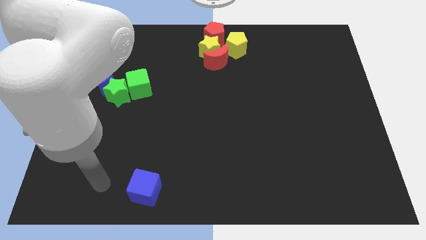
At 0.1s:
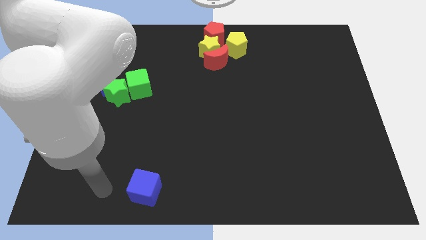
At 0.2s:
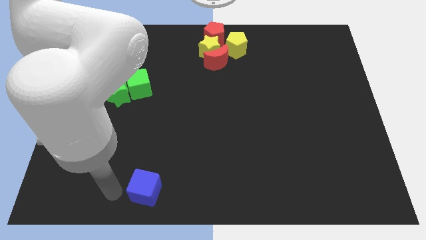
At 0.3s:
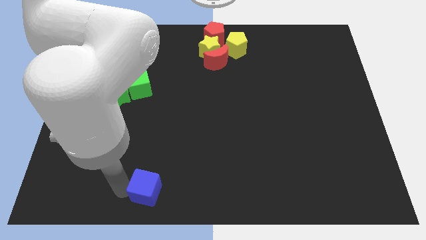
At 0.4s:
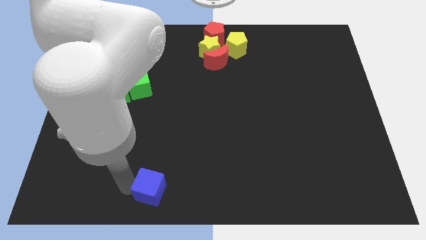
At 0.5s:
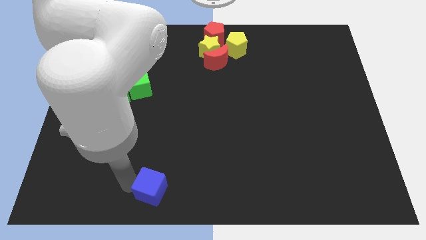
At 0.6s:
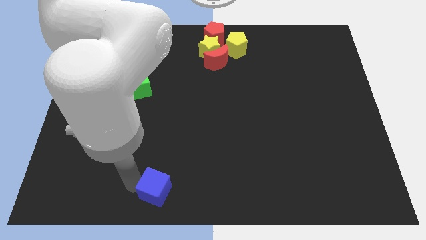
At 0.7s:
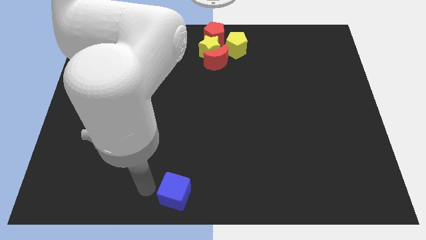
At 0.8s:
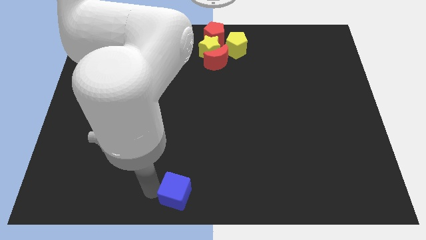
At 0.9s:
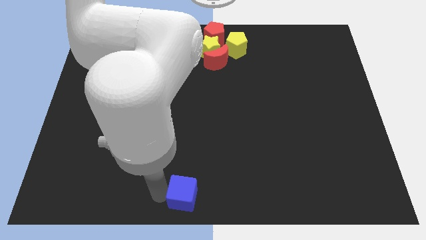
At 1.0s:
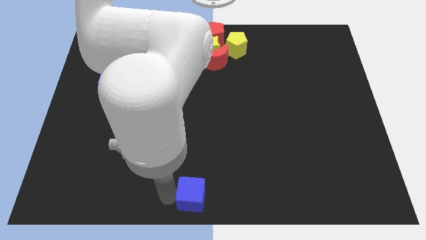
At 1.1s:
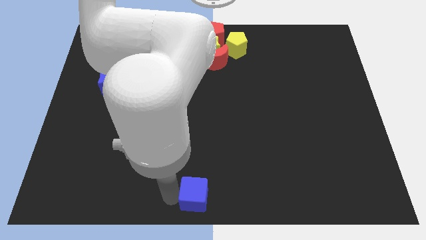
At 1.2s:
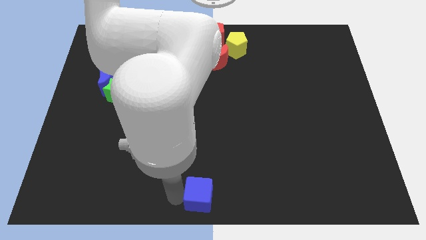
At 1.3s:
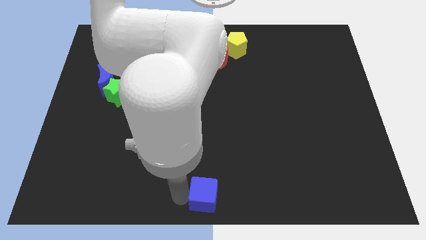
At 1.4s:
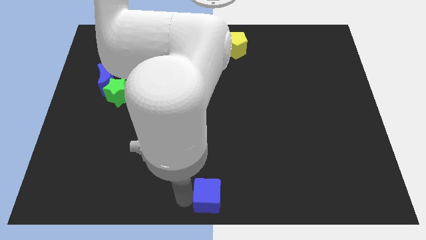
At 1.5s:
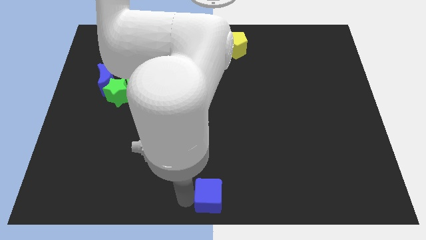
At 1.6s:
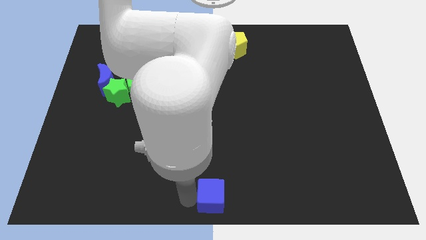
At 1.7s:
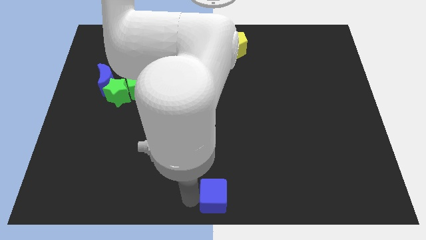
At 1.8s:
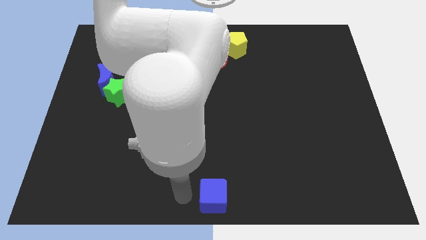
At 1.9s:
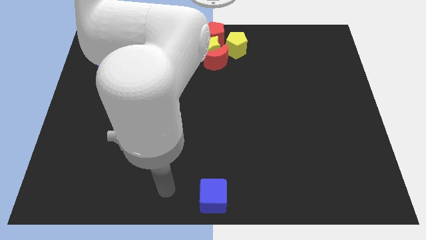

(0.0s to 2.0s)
move the blue cube to the bottom center of the board

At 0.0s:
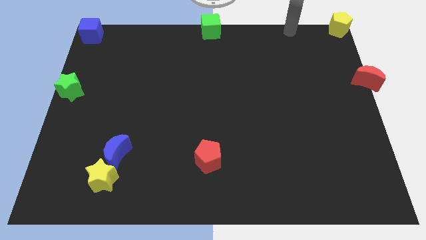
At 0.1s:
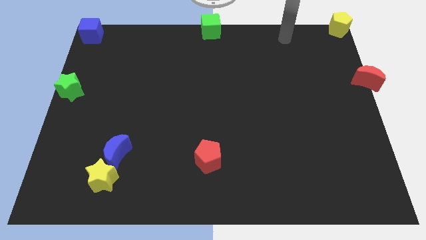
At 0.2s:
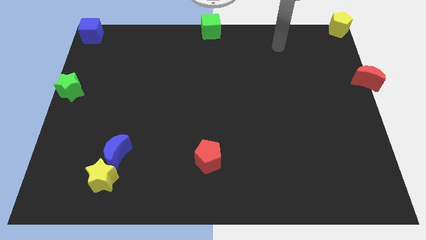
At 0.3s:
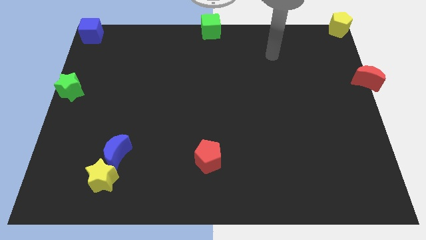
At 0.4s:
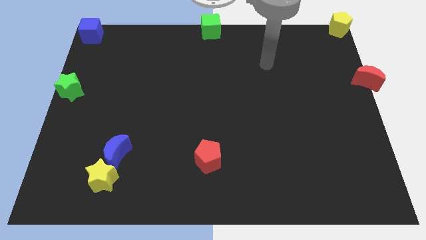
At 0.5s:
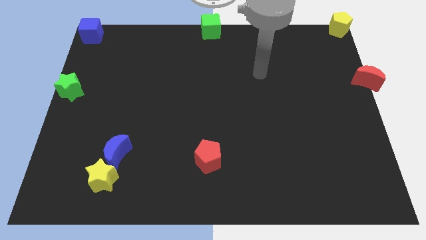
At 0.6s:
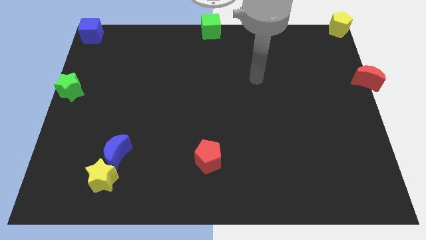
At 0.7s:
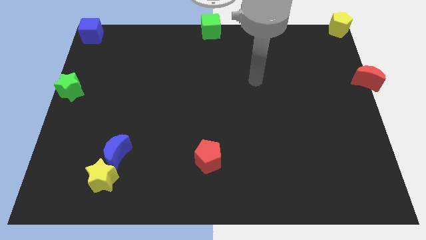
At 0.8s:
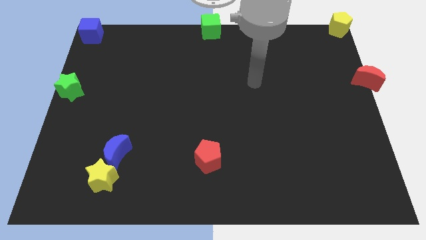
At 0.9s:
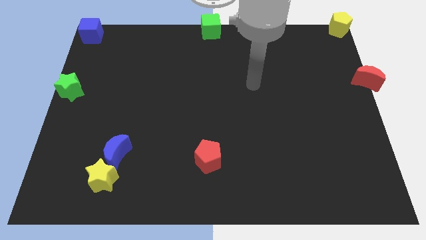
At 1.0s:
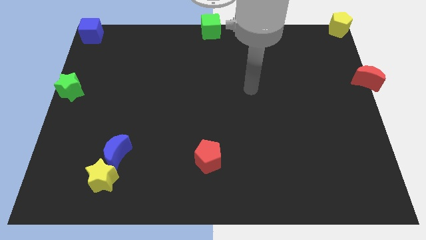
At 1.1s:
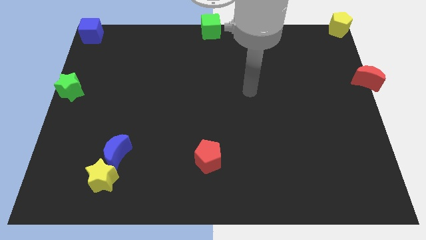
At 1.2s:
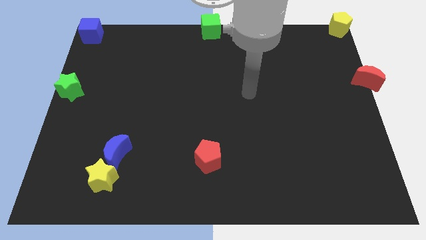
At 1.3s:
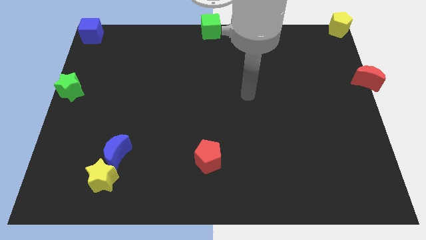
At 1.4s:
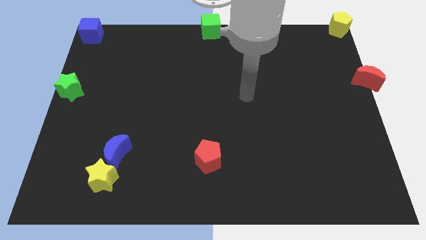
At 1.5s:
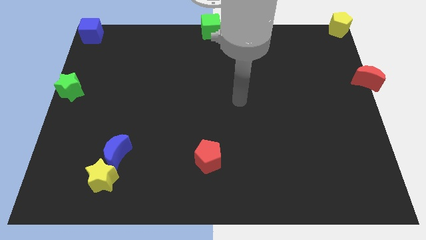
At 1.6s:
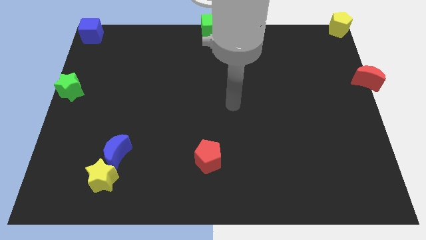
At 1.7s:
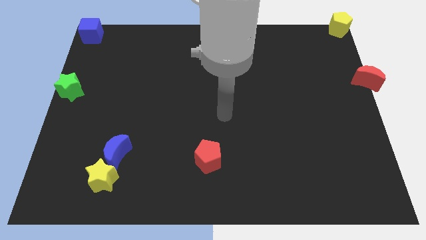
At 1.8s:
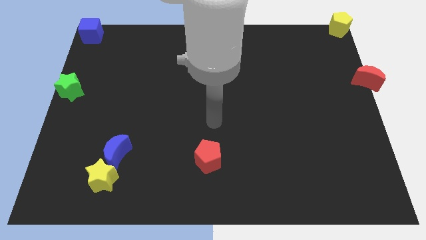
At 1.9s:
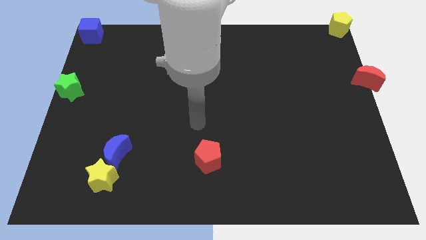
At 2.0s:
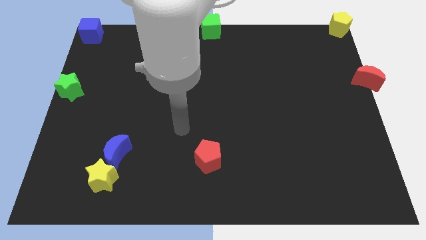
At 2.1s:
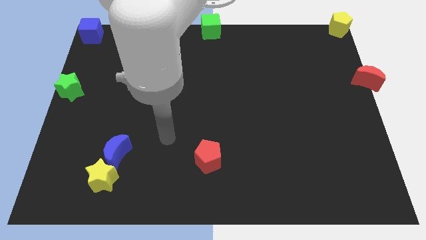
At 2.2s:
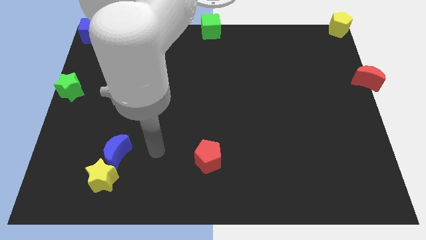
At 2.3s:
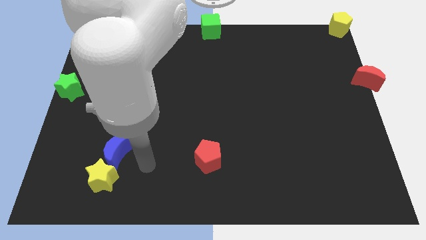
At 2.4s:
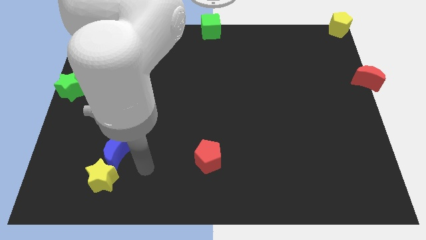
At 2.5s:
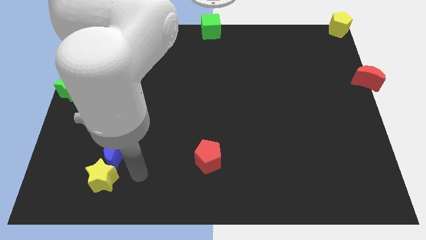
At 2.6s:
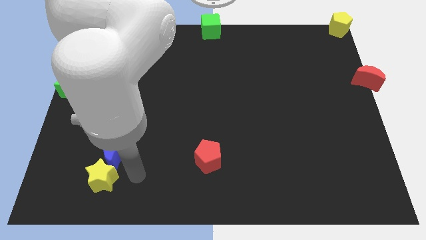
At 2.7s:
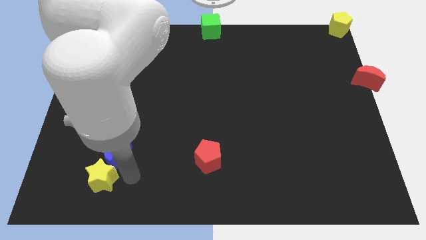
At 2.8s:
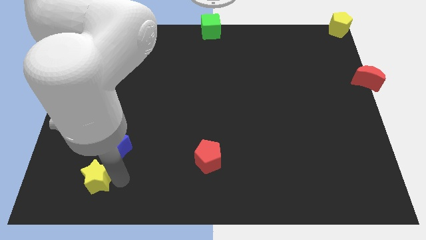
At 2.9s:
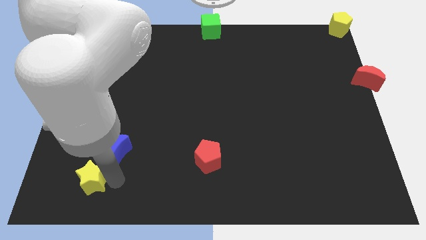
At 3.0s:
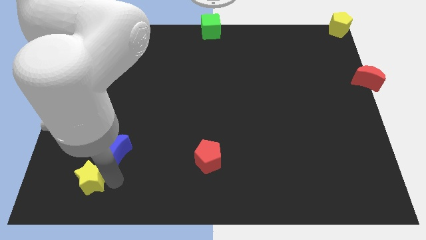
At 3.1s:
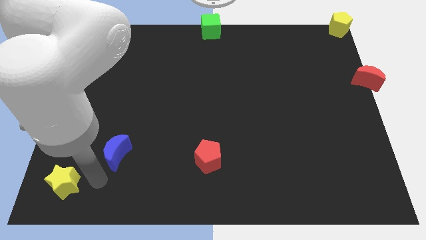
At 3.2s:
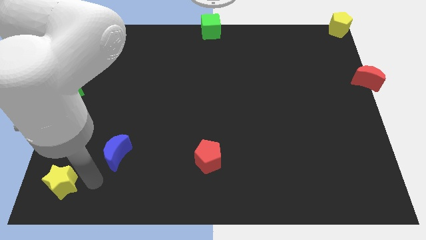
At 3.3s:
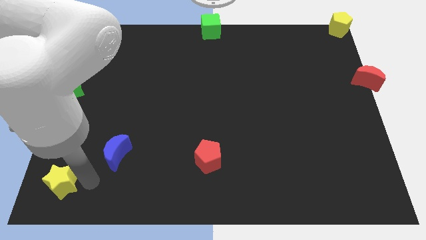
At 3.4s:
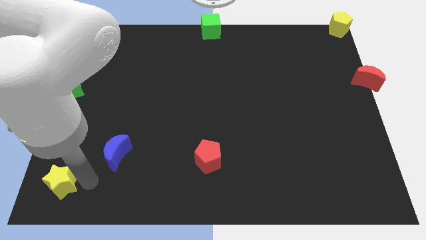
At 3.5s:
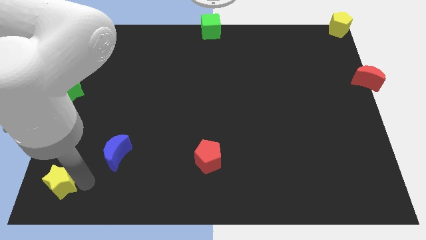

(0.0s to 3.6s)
separate yellow star from the blue moon

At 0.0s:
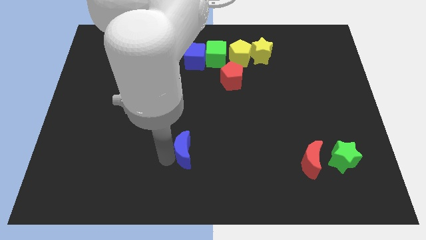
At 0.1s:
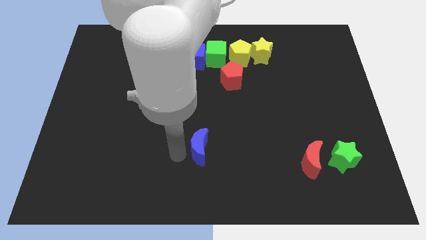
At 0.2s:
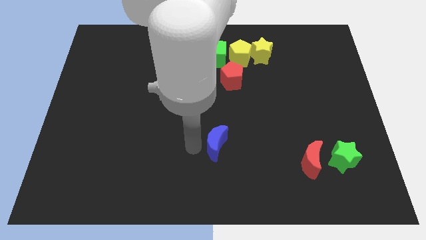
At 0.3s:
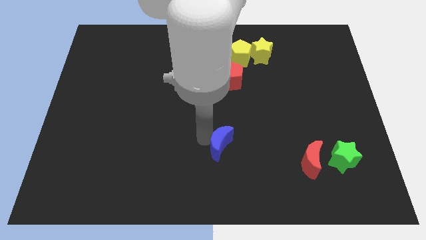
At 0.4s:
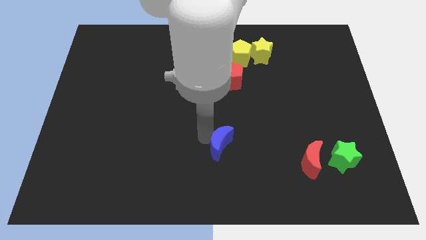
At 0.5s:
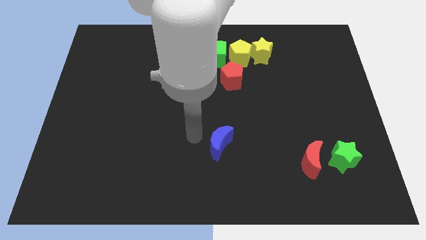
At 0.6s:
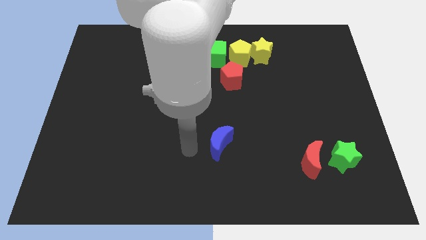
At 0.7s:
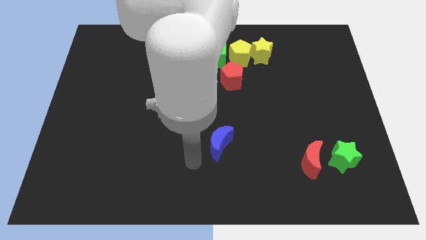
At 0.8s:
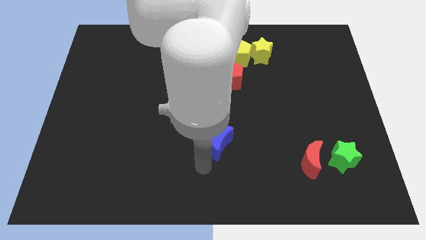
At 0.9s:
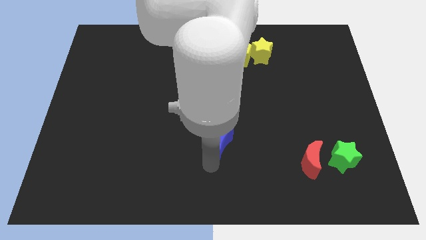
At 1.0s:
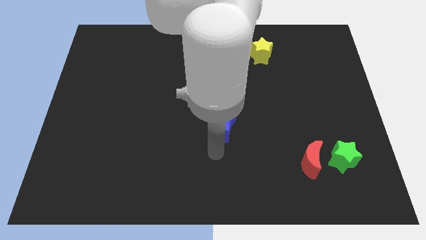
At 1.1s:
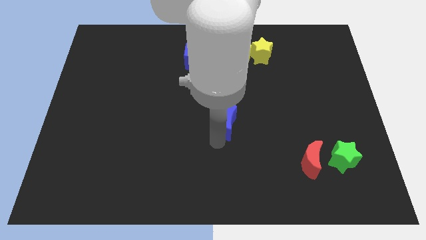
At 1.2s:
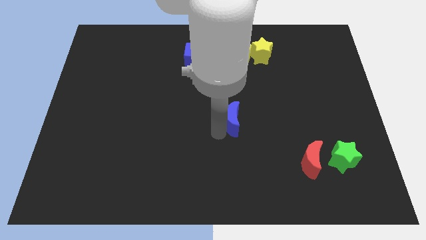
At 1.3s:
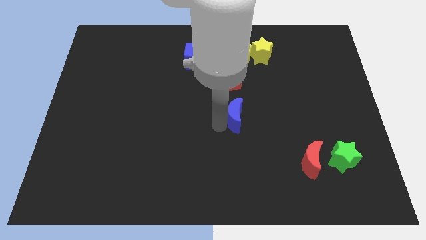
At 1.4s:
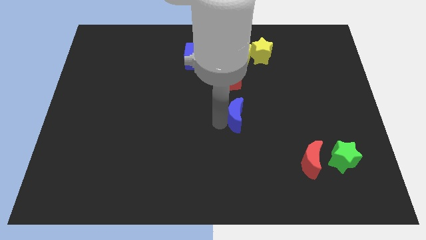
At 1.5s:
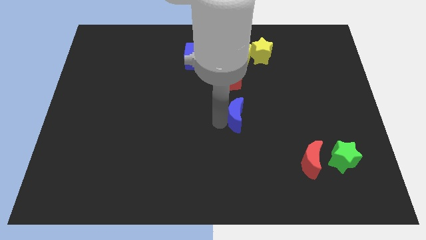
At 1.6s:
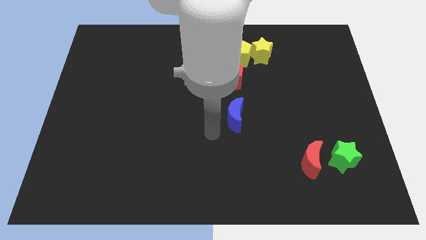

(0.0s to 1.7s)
place the blue moon below the red pentagon

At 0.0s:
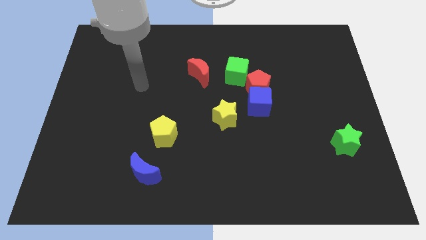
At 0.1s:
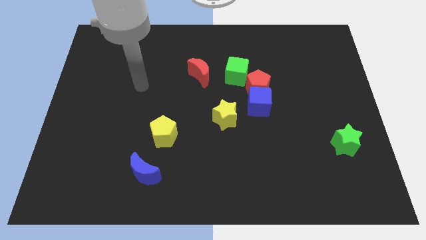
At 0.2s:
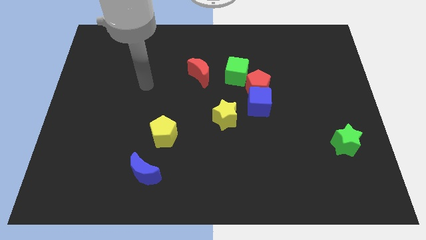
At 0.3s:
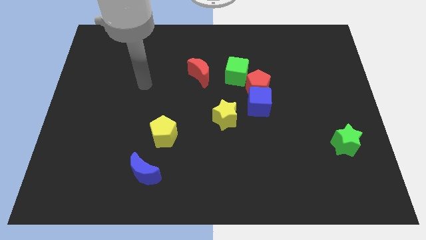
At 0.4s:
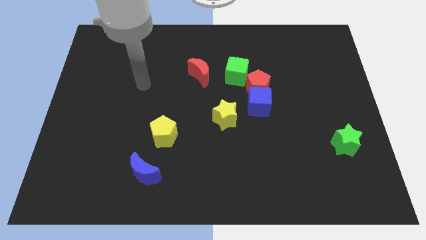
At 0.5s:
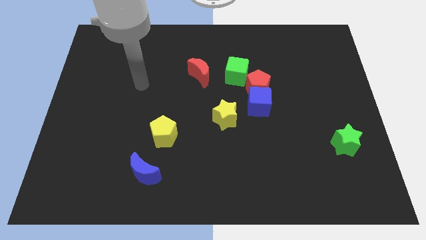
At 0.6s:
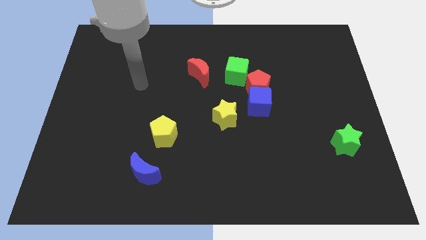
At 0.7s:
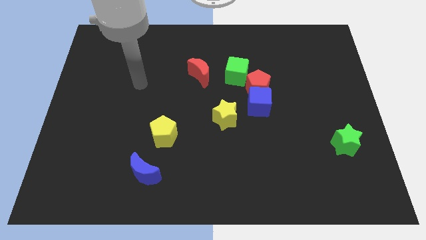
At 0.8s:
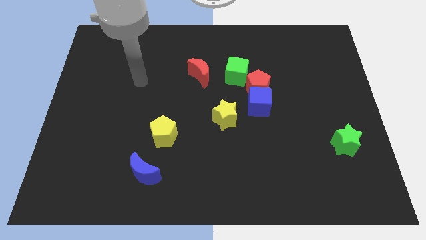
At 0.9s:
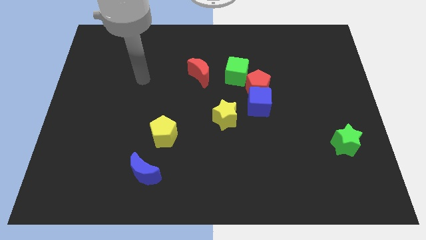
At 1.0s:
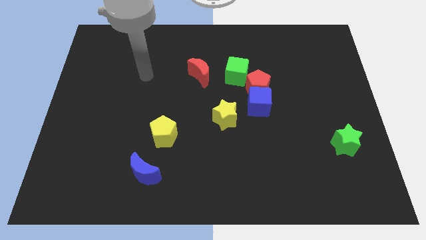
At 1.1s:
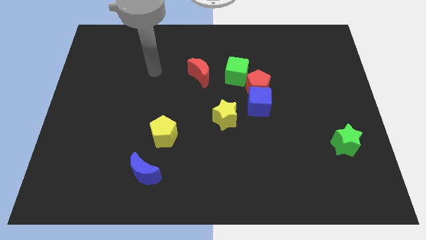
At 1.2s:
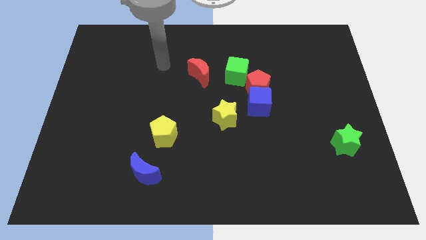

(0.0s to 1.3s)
move your arm towards the red crescent

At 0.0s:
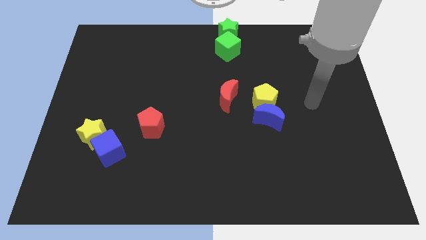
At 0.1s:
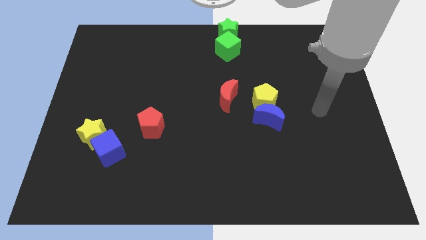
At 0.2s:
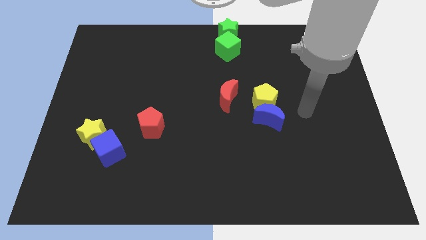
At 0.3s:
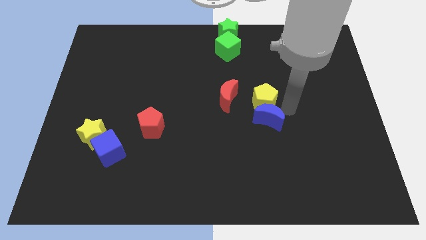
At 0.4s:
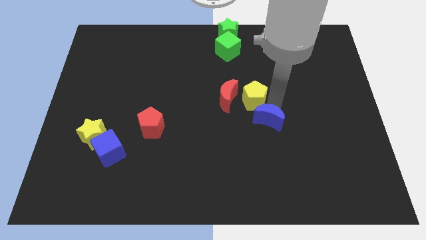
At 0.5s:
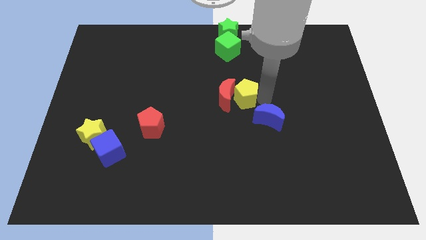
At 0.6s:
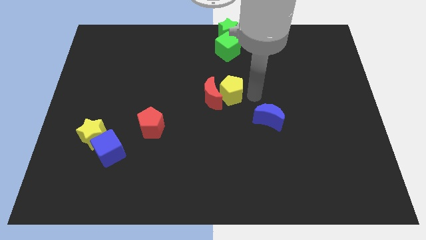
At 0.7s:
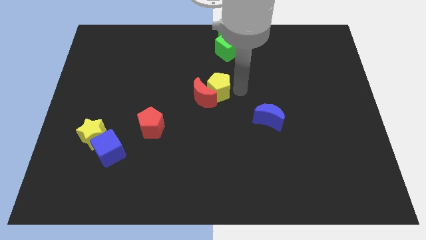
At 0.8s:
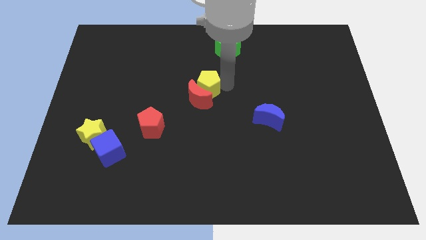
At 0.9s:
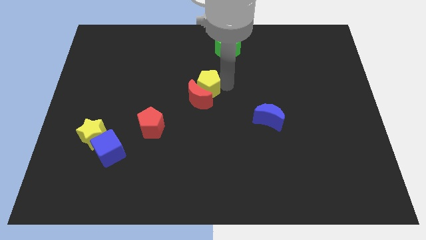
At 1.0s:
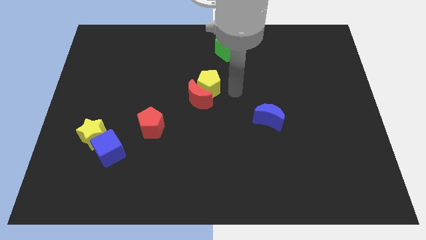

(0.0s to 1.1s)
push yellow pentagon in to red moon
